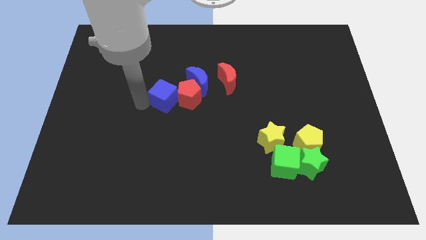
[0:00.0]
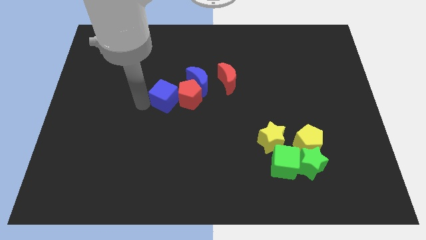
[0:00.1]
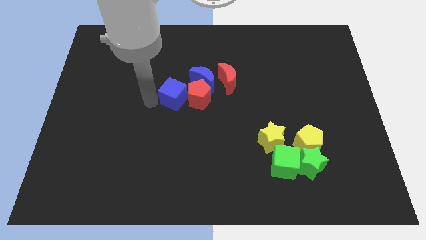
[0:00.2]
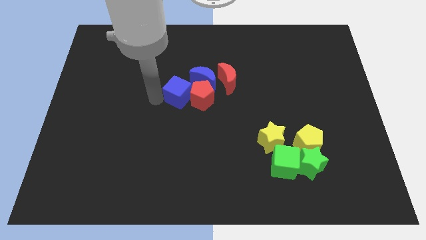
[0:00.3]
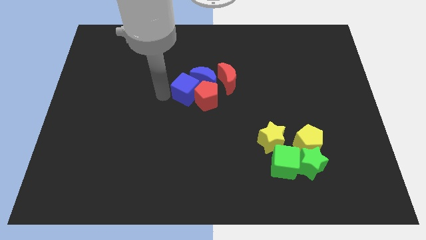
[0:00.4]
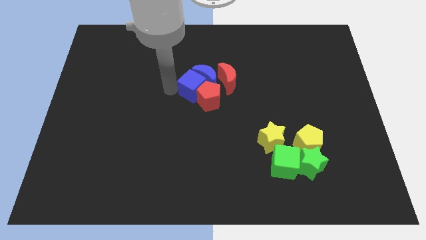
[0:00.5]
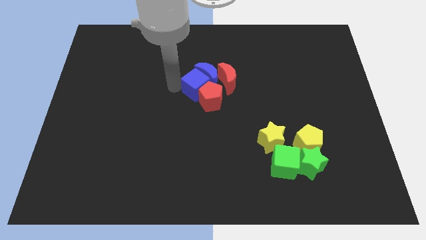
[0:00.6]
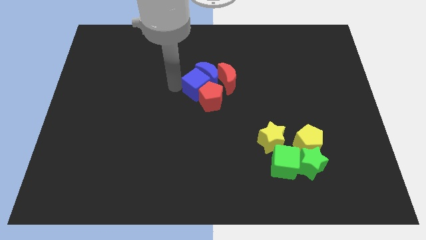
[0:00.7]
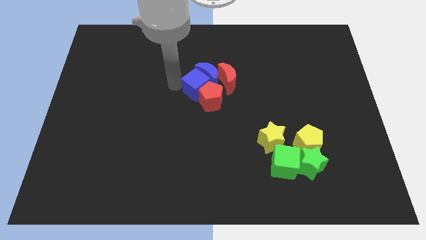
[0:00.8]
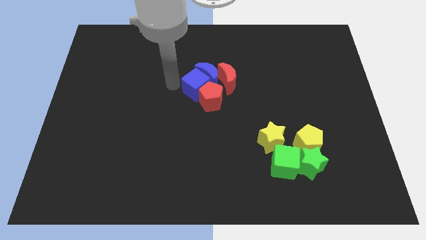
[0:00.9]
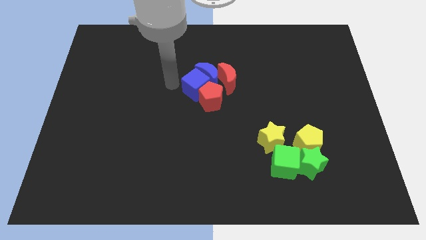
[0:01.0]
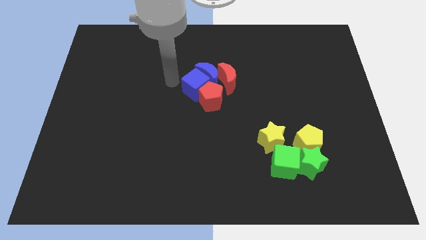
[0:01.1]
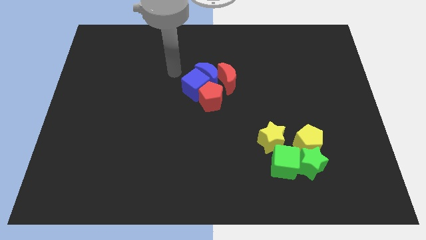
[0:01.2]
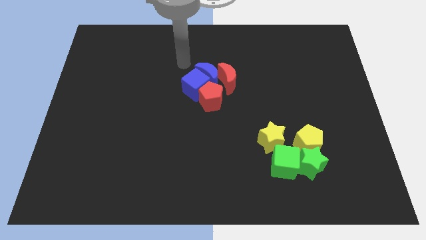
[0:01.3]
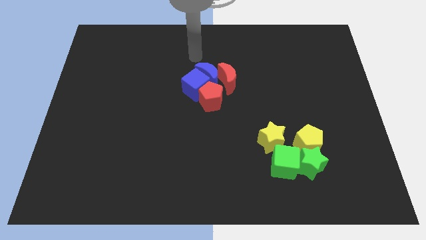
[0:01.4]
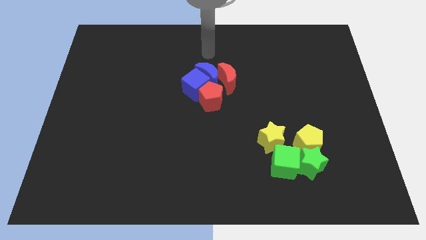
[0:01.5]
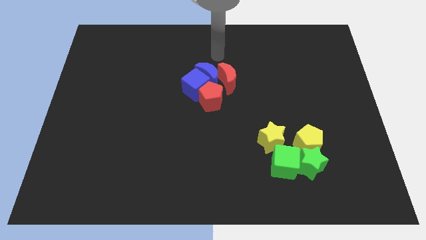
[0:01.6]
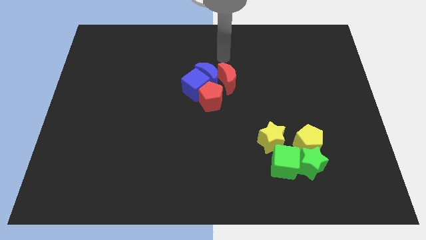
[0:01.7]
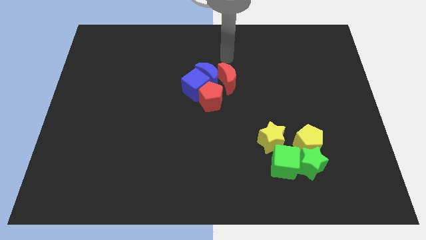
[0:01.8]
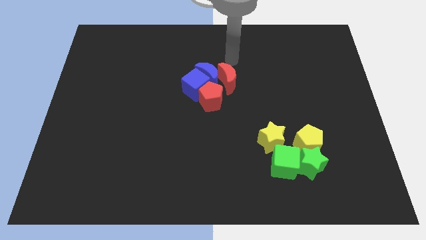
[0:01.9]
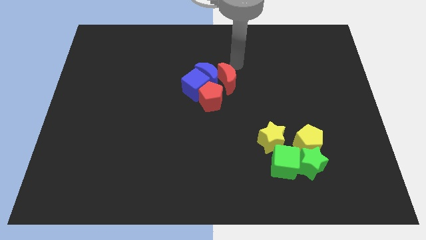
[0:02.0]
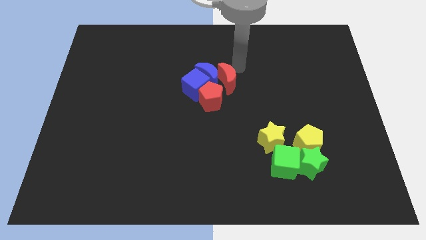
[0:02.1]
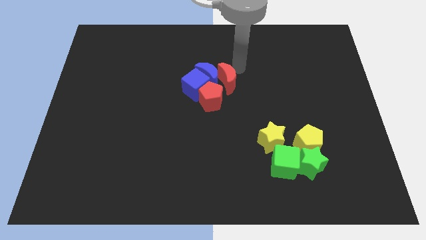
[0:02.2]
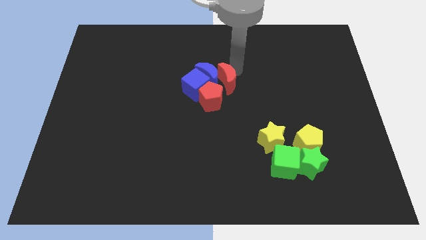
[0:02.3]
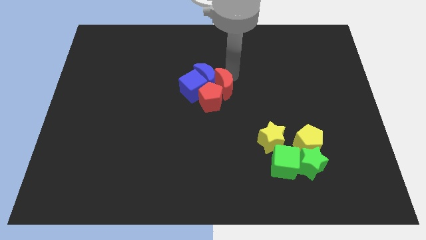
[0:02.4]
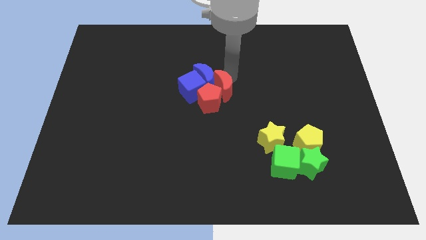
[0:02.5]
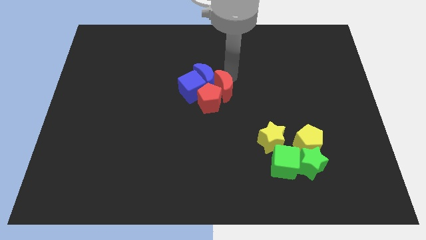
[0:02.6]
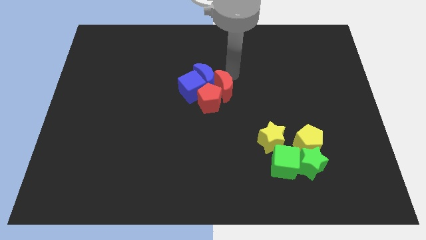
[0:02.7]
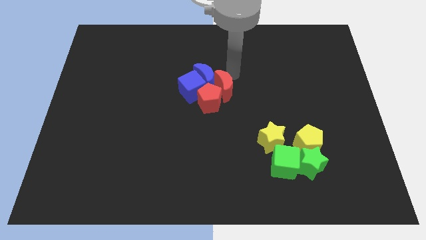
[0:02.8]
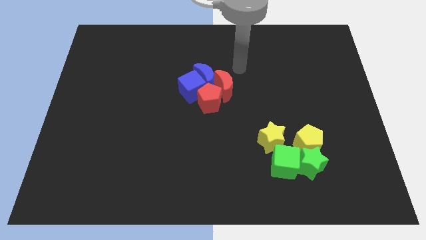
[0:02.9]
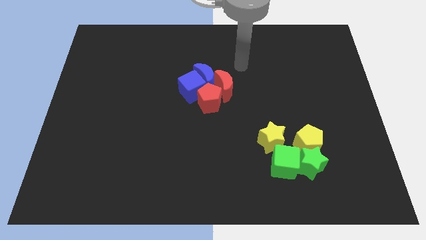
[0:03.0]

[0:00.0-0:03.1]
move the blue and red blocks together to form a group

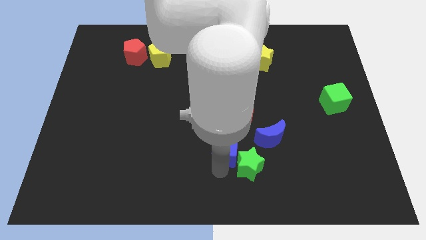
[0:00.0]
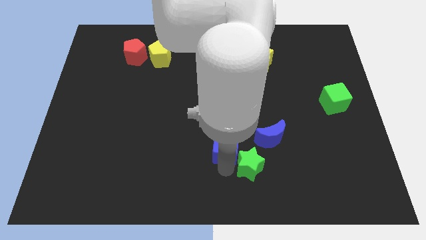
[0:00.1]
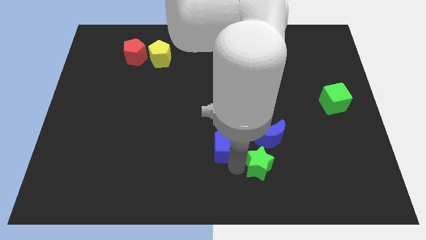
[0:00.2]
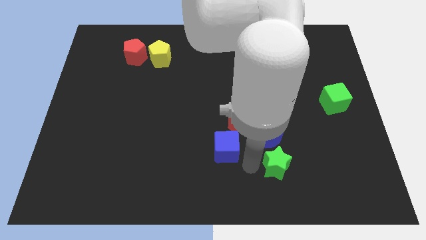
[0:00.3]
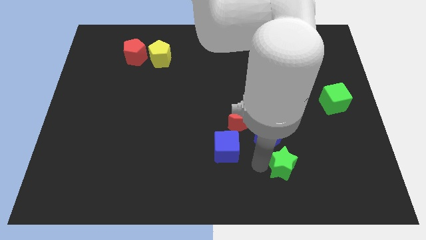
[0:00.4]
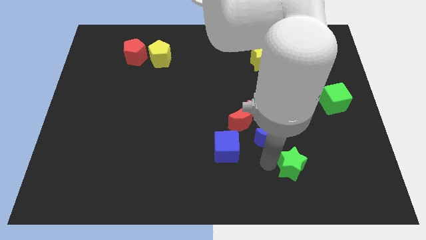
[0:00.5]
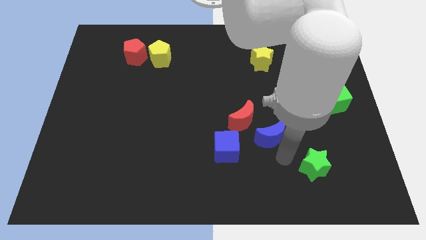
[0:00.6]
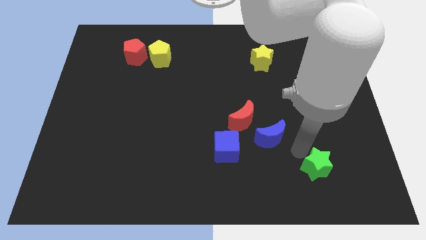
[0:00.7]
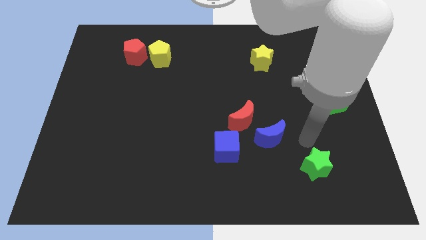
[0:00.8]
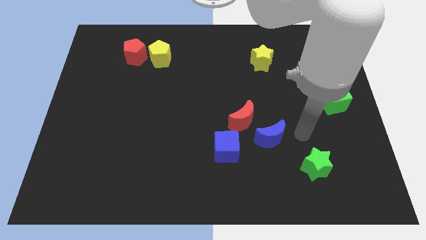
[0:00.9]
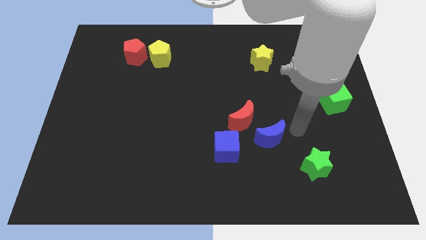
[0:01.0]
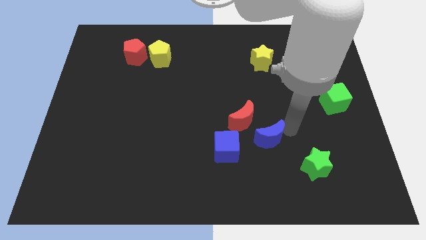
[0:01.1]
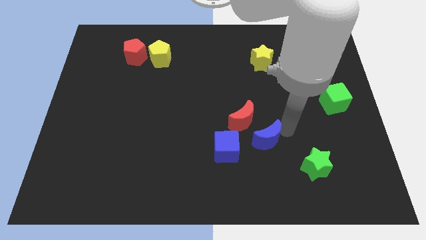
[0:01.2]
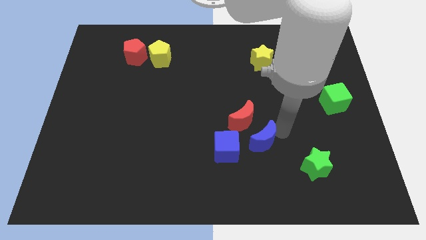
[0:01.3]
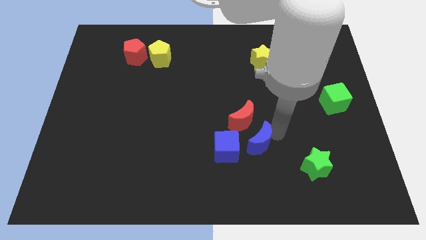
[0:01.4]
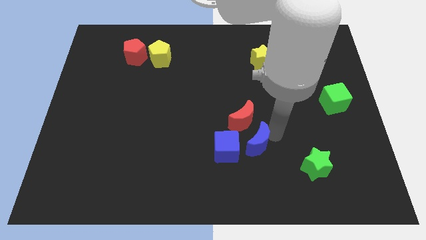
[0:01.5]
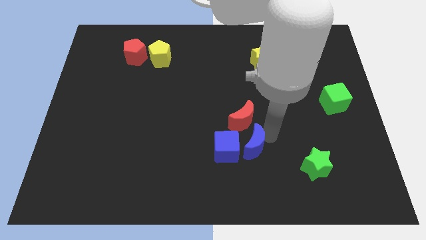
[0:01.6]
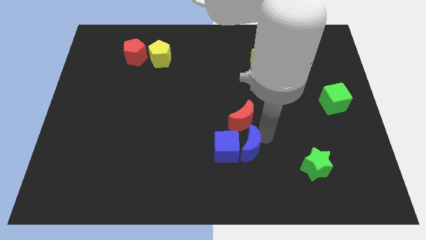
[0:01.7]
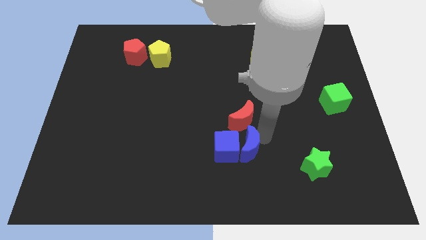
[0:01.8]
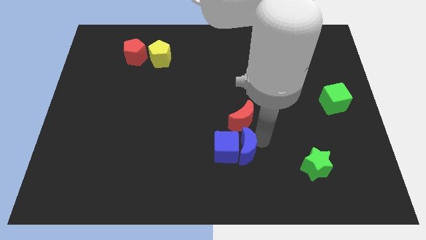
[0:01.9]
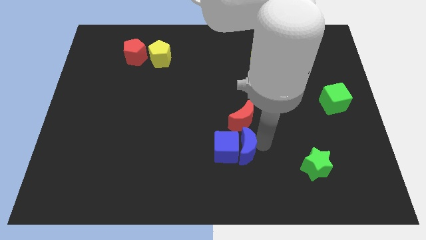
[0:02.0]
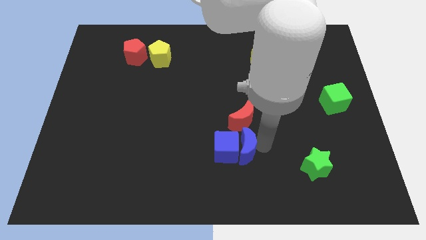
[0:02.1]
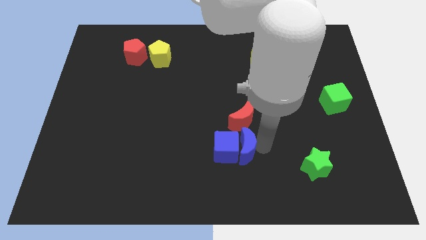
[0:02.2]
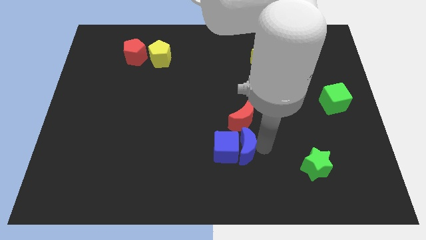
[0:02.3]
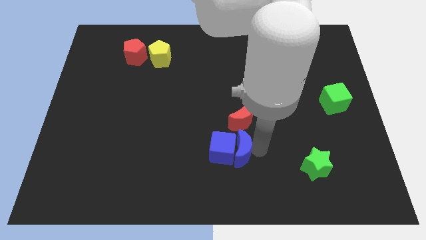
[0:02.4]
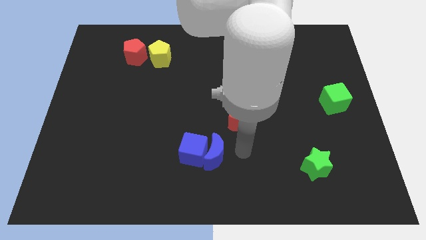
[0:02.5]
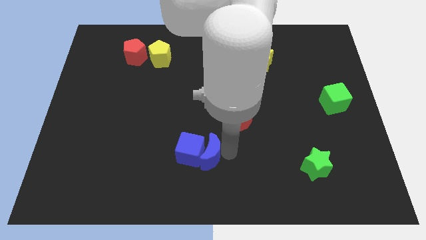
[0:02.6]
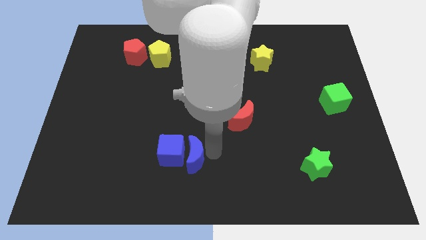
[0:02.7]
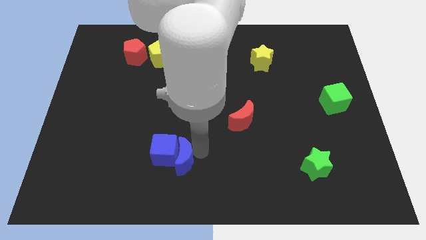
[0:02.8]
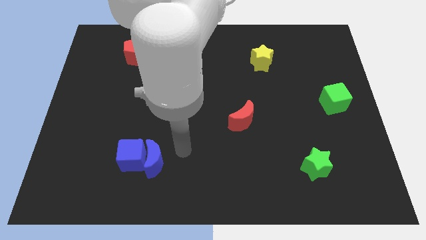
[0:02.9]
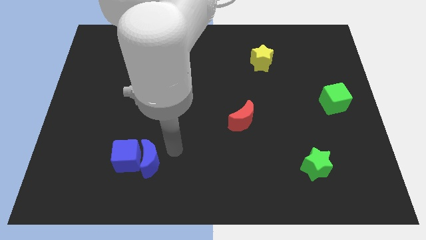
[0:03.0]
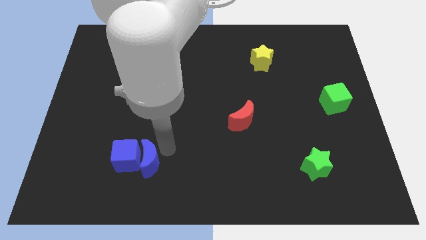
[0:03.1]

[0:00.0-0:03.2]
push the blue crescent below the yellow pentagon

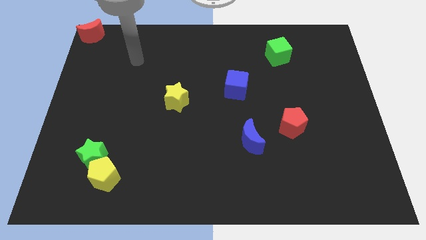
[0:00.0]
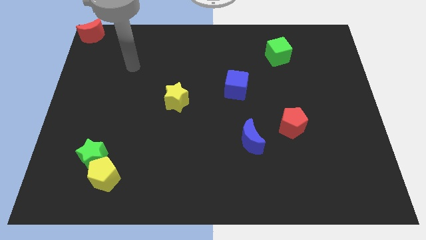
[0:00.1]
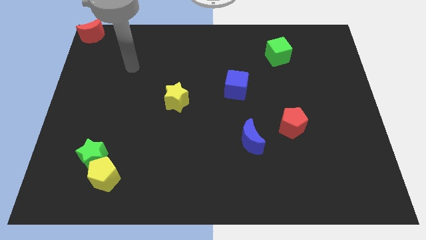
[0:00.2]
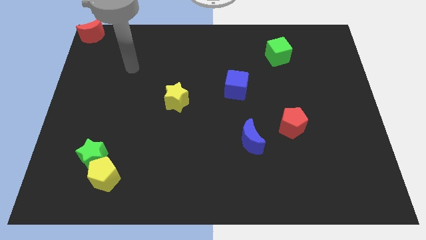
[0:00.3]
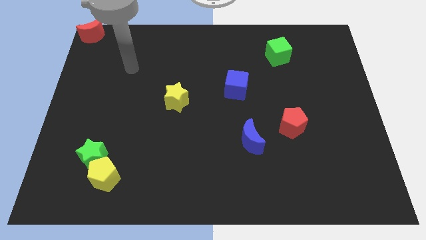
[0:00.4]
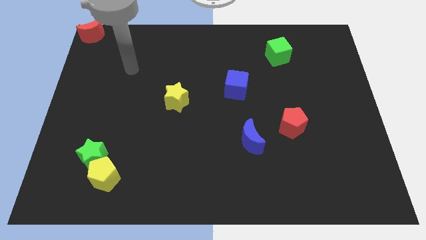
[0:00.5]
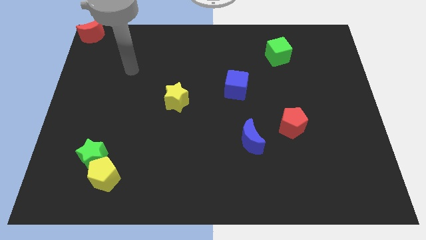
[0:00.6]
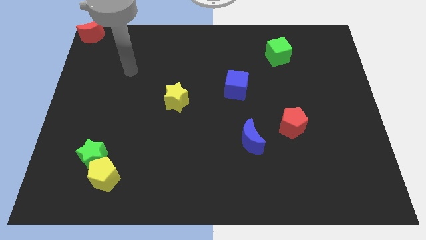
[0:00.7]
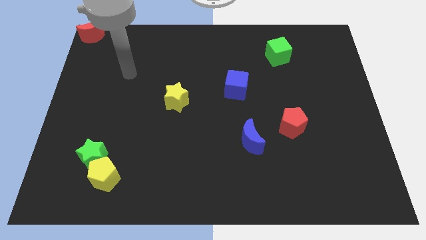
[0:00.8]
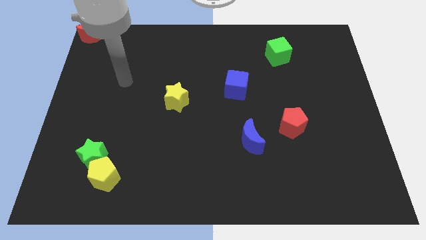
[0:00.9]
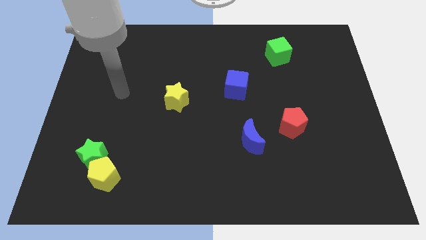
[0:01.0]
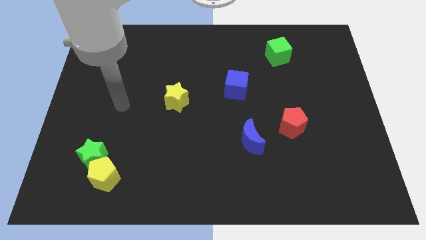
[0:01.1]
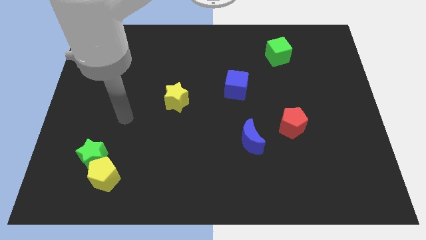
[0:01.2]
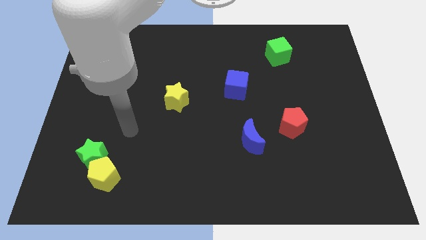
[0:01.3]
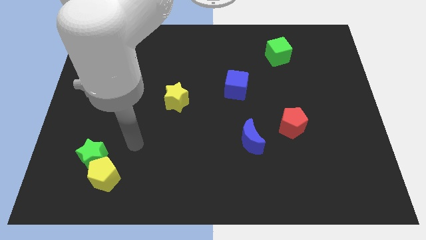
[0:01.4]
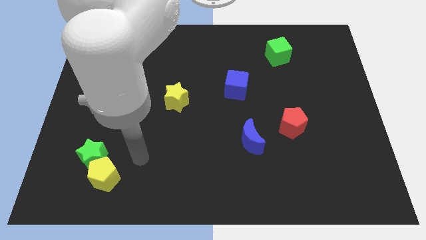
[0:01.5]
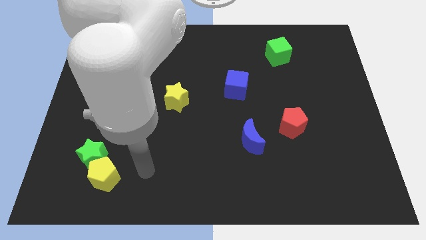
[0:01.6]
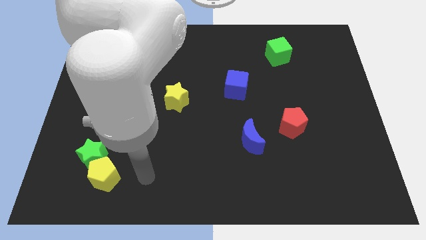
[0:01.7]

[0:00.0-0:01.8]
point your arm at the right side of the yellow pentagon

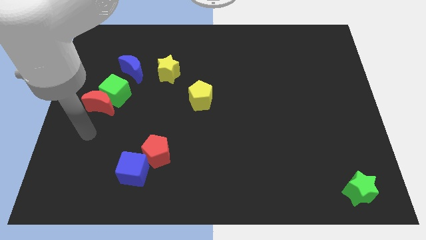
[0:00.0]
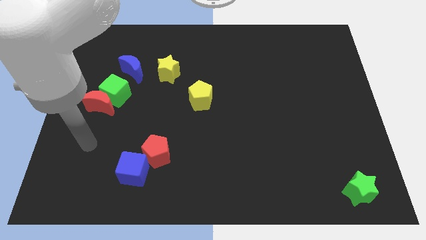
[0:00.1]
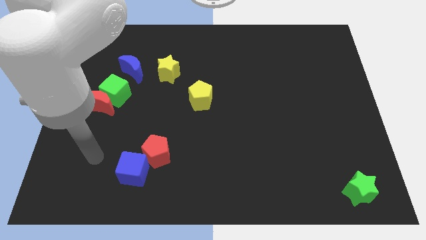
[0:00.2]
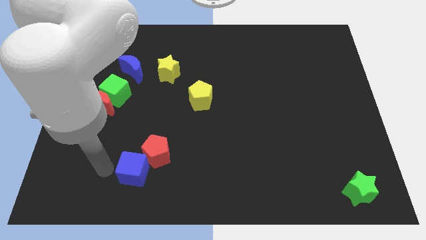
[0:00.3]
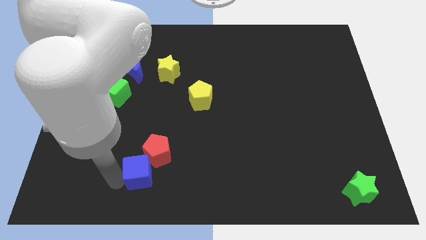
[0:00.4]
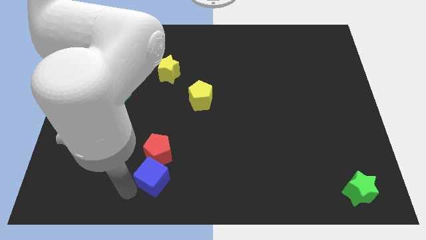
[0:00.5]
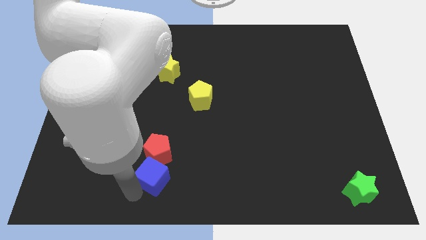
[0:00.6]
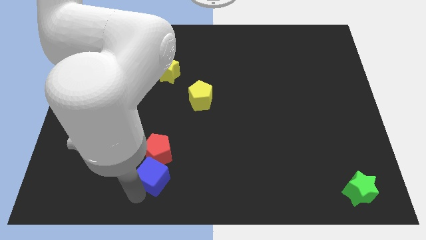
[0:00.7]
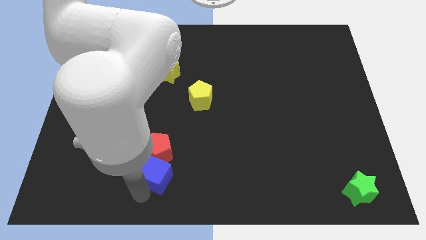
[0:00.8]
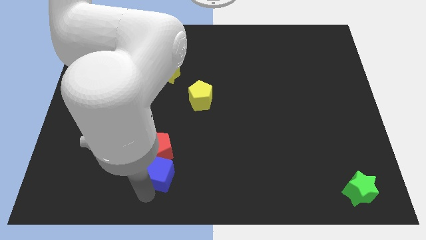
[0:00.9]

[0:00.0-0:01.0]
place the blue cube down to the red pentagon
